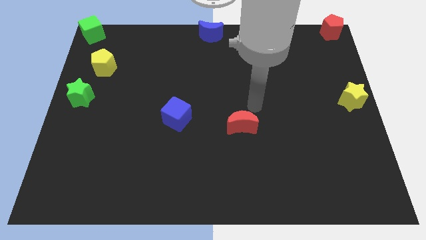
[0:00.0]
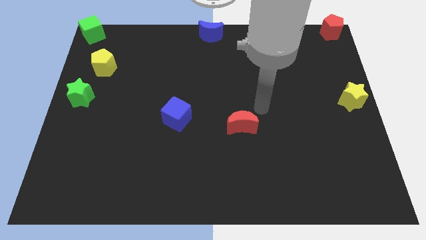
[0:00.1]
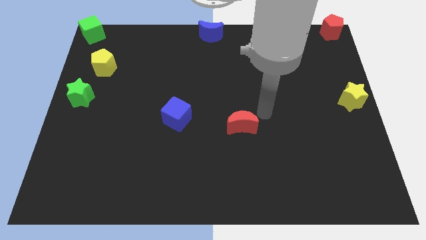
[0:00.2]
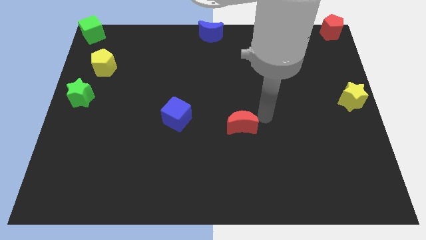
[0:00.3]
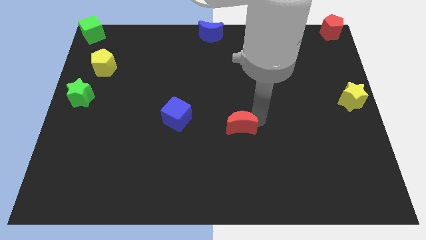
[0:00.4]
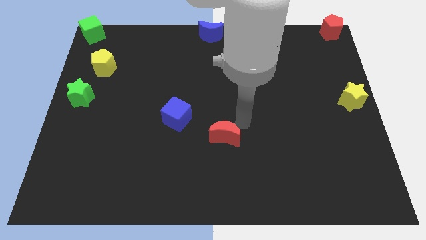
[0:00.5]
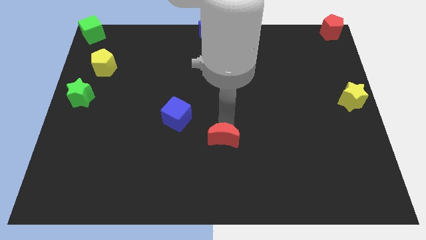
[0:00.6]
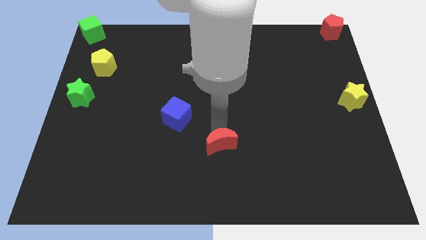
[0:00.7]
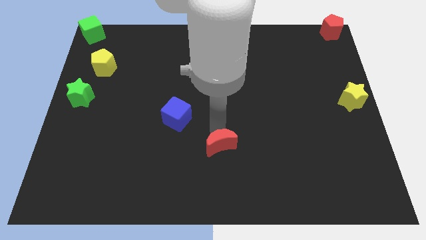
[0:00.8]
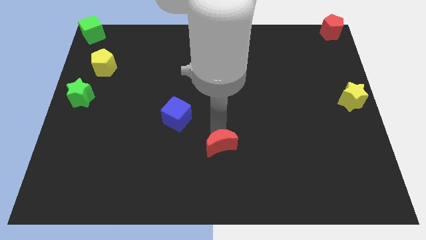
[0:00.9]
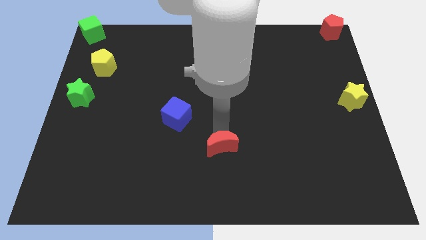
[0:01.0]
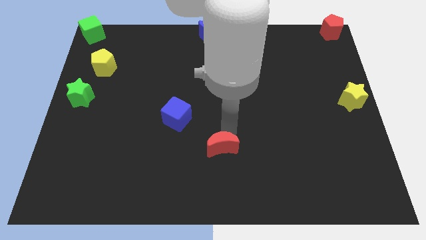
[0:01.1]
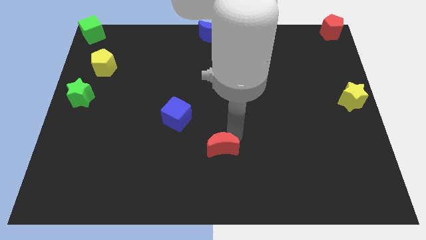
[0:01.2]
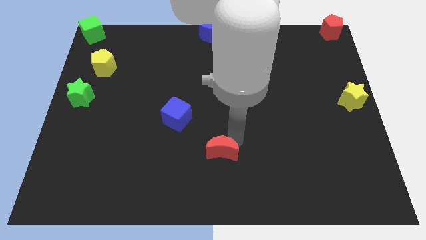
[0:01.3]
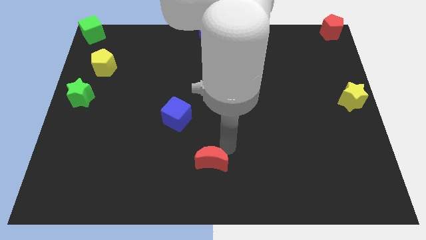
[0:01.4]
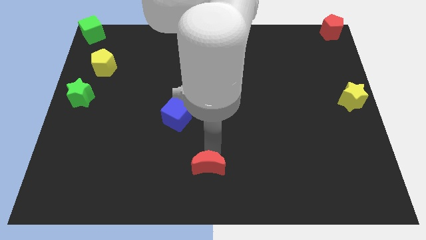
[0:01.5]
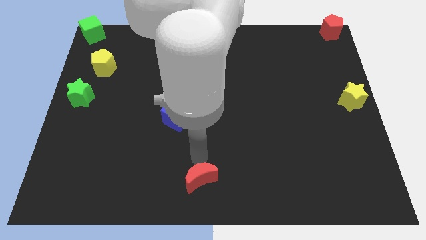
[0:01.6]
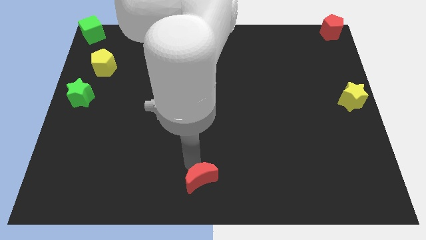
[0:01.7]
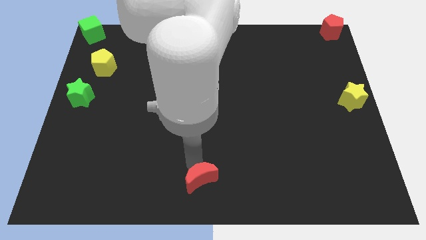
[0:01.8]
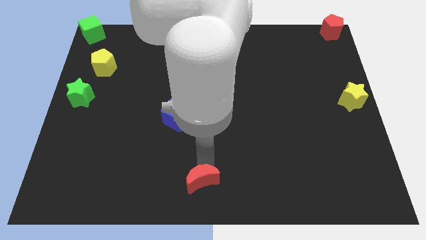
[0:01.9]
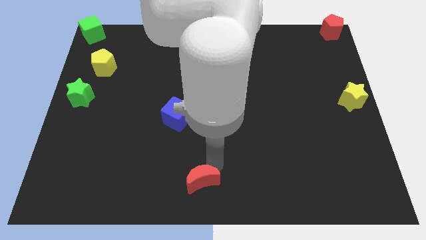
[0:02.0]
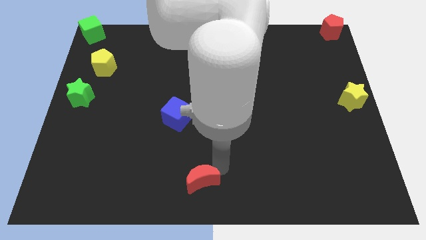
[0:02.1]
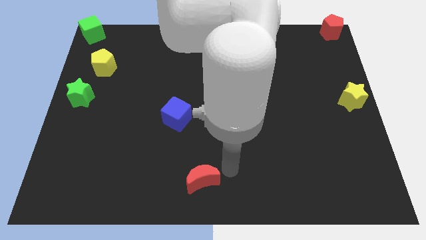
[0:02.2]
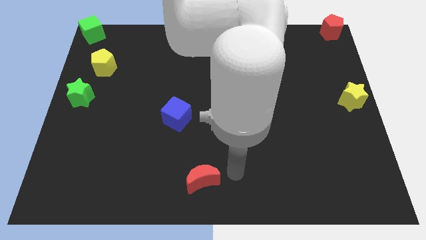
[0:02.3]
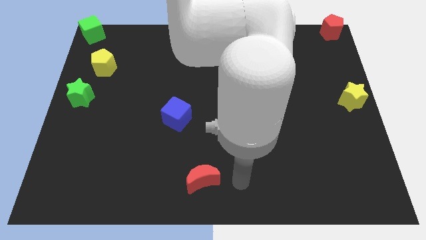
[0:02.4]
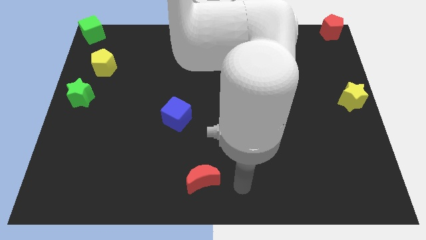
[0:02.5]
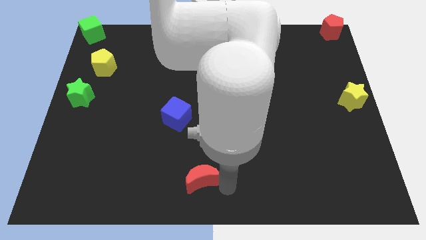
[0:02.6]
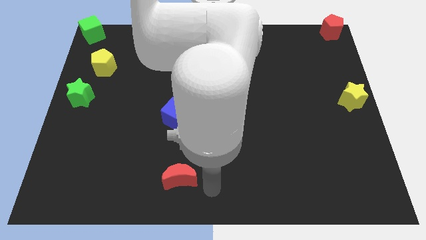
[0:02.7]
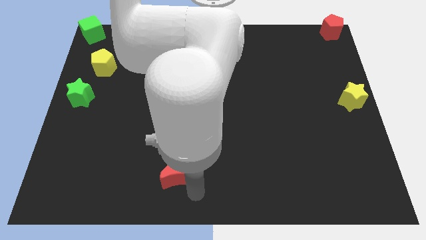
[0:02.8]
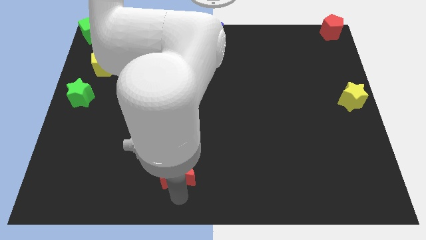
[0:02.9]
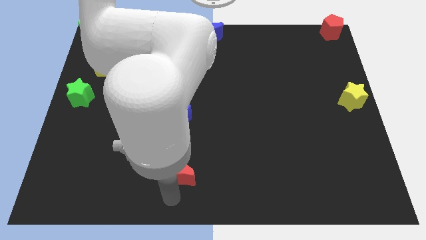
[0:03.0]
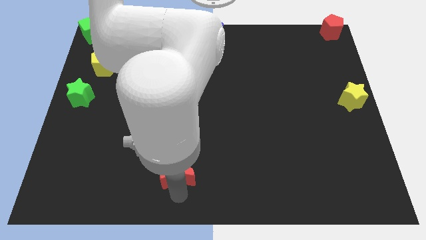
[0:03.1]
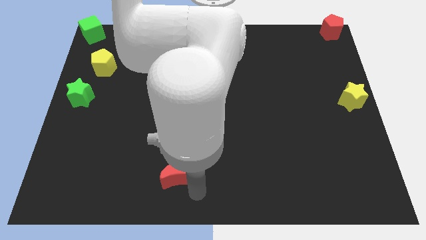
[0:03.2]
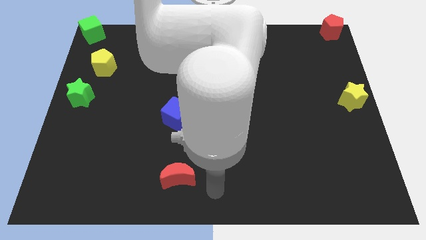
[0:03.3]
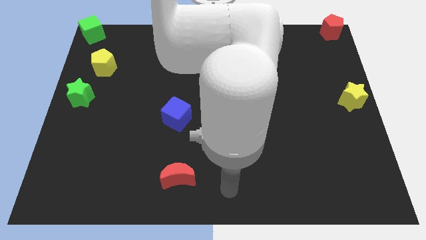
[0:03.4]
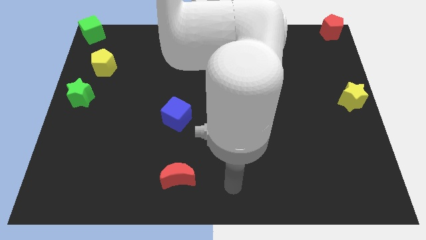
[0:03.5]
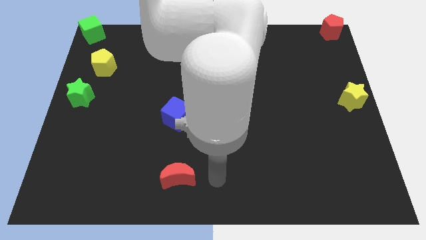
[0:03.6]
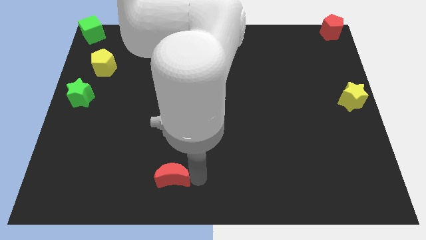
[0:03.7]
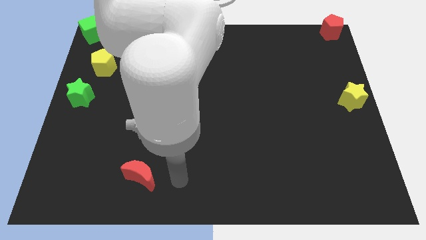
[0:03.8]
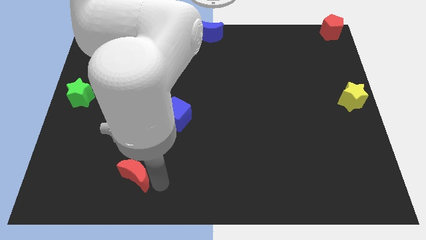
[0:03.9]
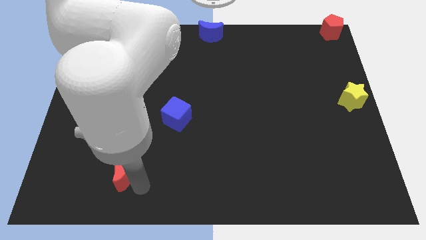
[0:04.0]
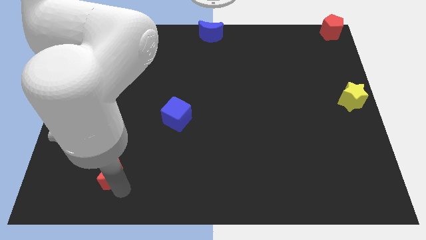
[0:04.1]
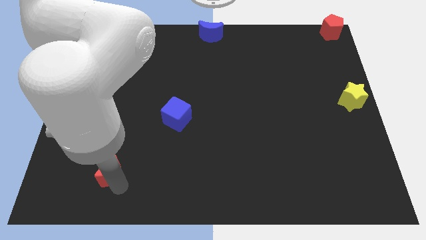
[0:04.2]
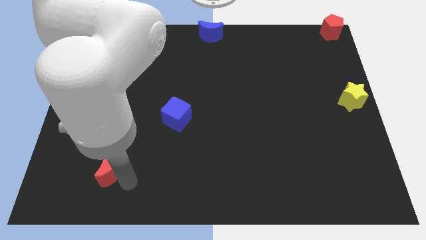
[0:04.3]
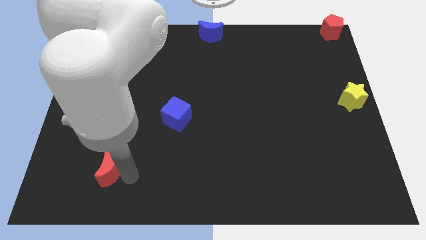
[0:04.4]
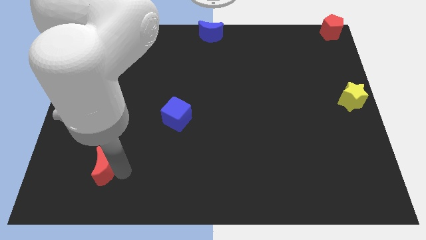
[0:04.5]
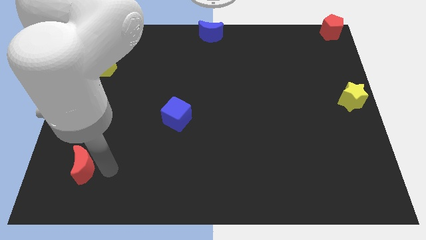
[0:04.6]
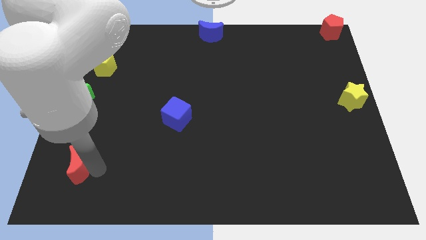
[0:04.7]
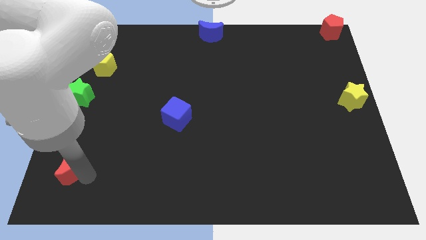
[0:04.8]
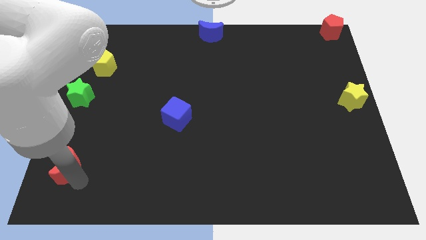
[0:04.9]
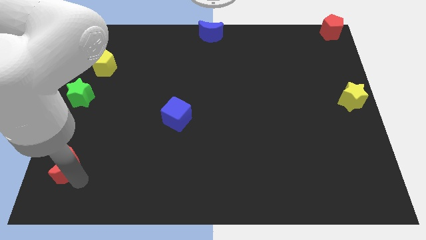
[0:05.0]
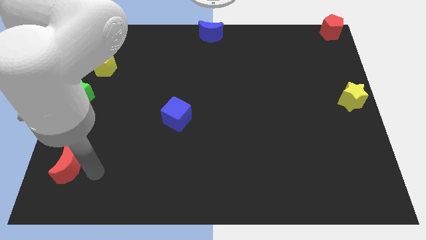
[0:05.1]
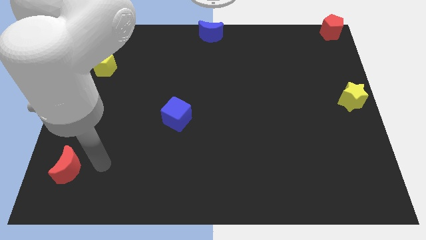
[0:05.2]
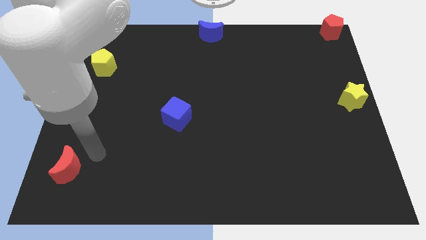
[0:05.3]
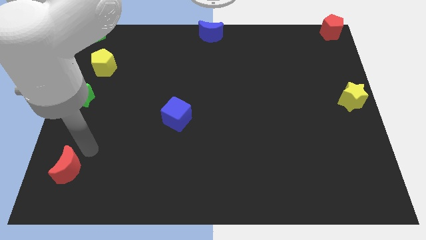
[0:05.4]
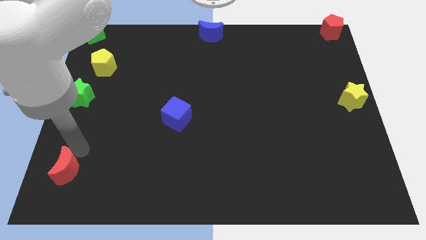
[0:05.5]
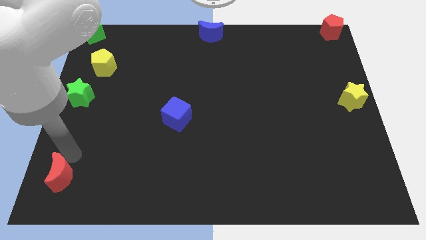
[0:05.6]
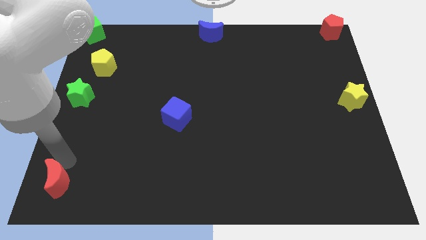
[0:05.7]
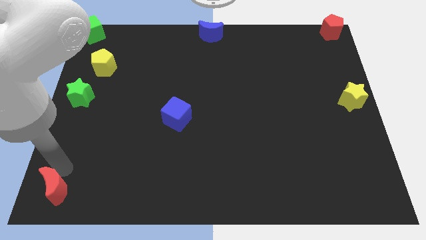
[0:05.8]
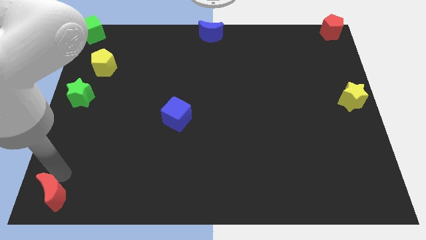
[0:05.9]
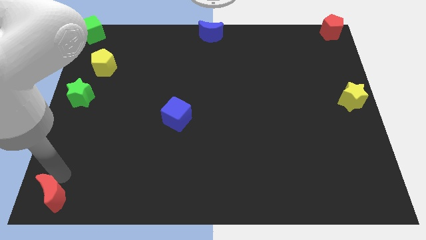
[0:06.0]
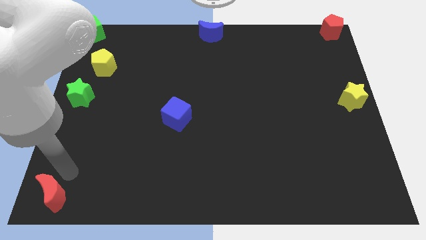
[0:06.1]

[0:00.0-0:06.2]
push the red crescent to the left bottom

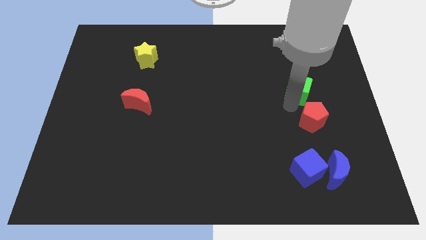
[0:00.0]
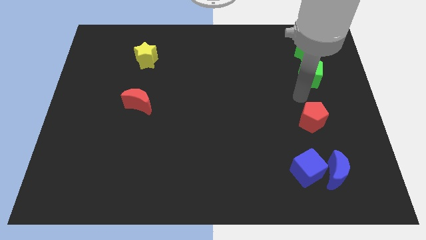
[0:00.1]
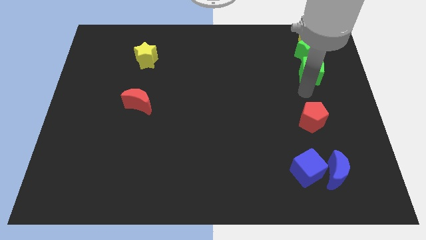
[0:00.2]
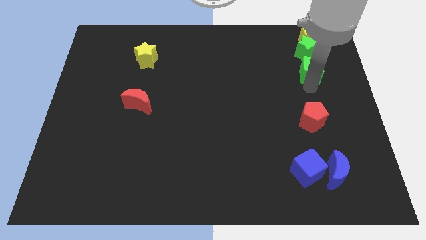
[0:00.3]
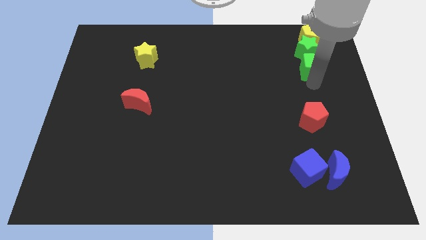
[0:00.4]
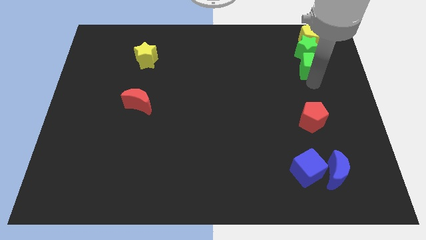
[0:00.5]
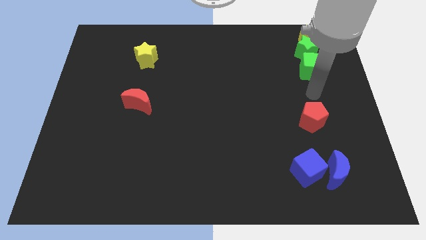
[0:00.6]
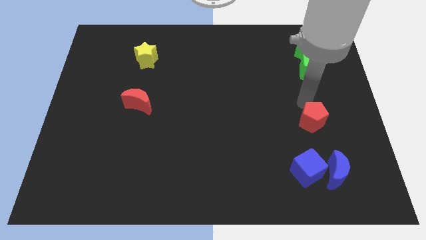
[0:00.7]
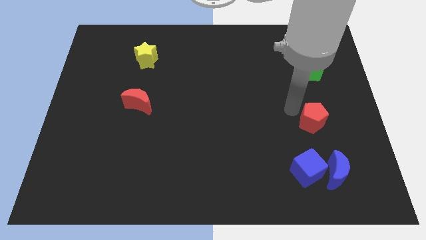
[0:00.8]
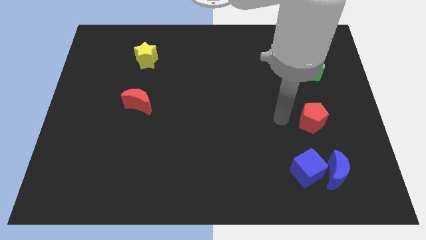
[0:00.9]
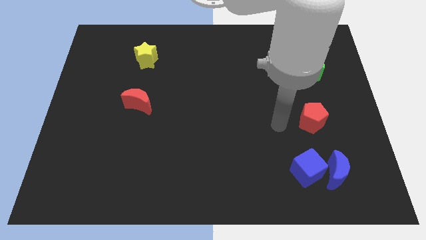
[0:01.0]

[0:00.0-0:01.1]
place the arm towards the left of the red pentagon

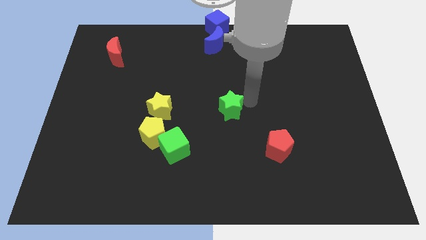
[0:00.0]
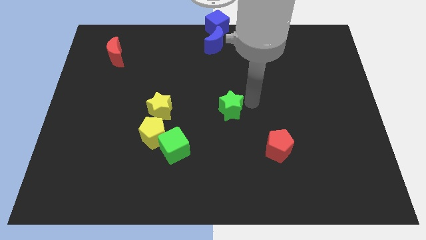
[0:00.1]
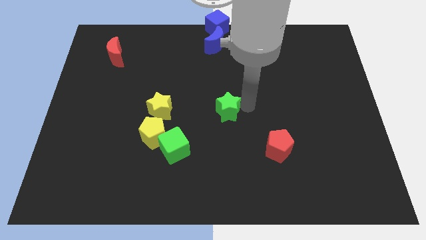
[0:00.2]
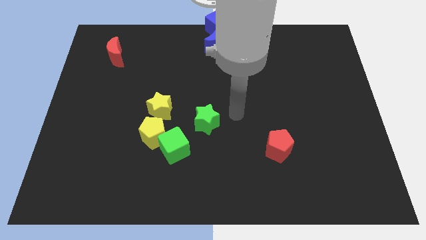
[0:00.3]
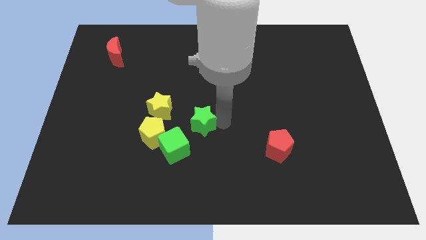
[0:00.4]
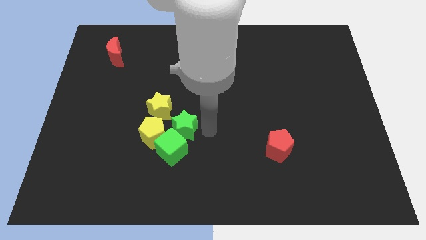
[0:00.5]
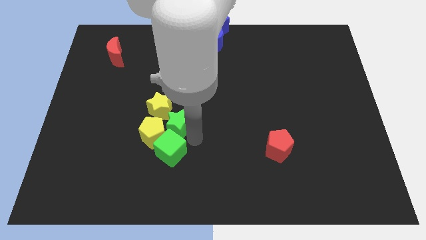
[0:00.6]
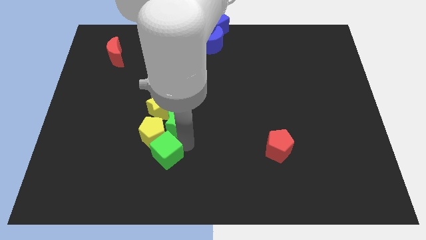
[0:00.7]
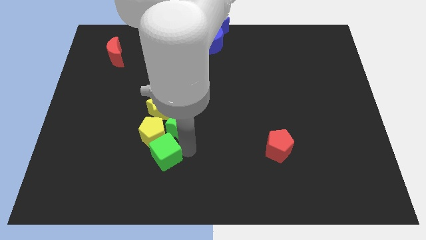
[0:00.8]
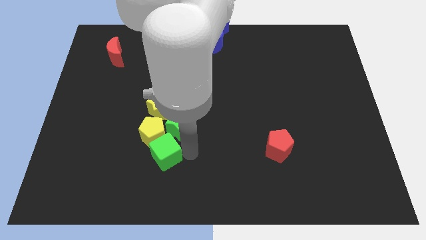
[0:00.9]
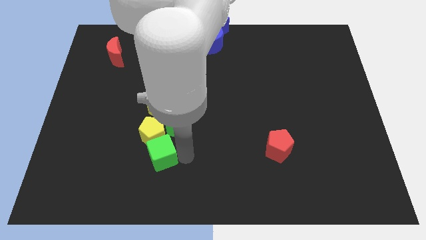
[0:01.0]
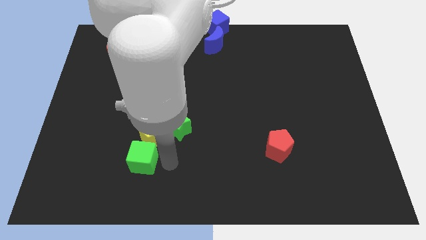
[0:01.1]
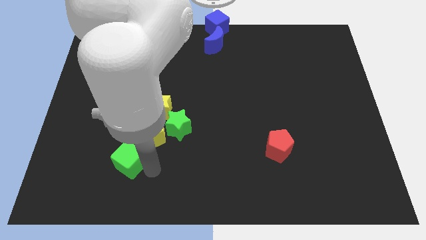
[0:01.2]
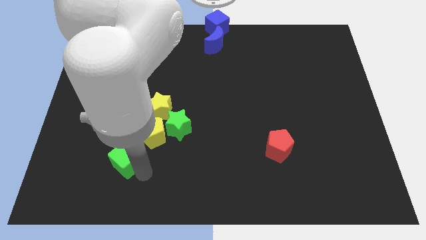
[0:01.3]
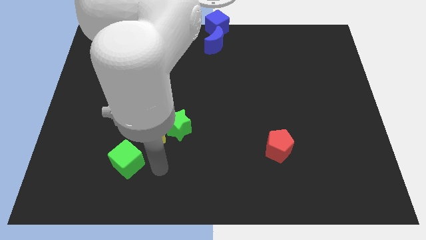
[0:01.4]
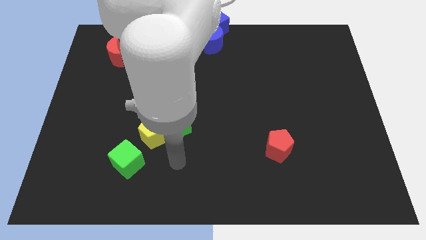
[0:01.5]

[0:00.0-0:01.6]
push green cube towards left
